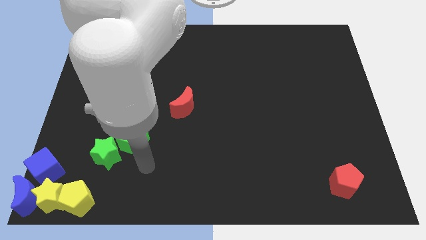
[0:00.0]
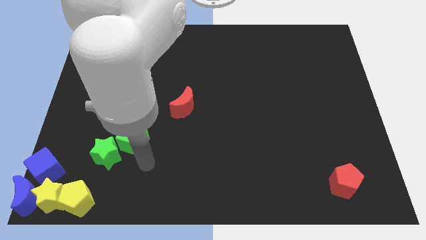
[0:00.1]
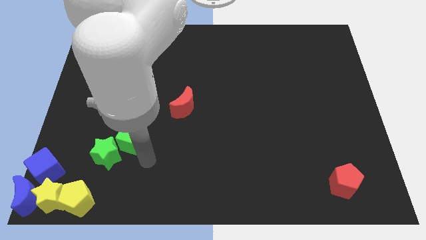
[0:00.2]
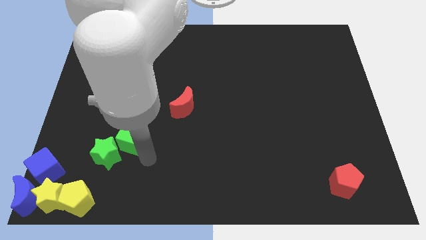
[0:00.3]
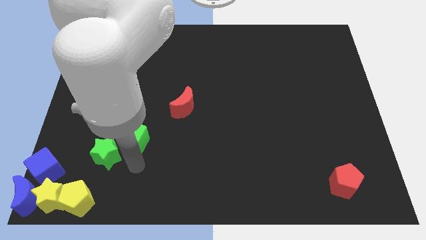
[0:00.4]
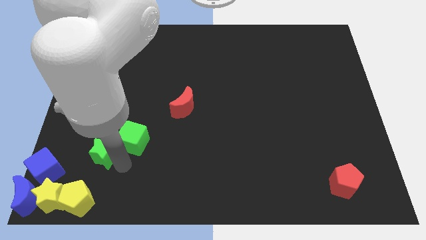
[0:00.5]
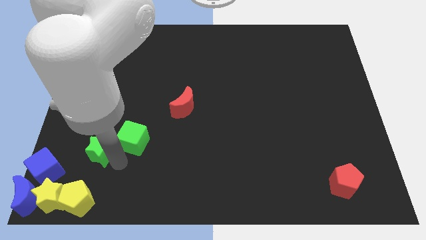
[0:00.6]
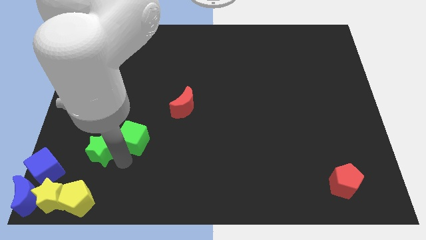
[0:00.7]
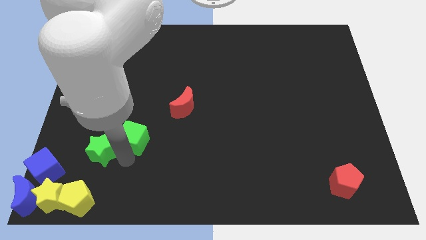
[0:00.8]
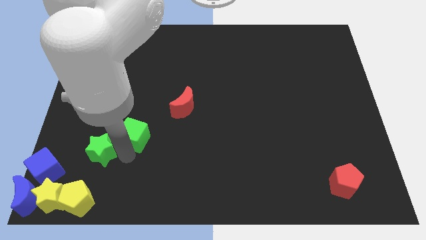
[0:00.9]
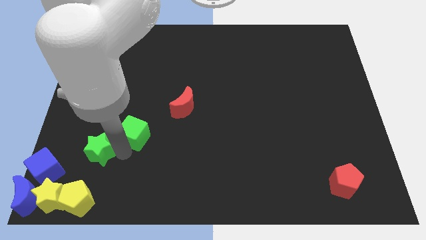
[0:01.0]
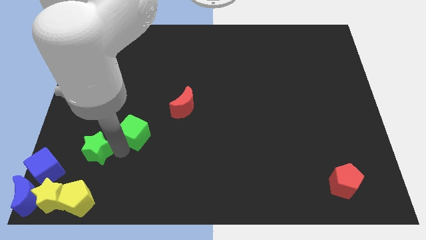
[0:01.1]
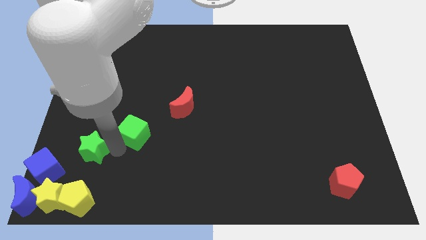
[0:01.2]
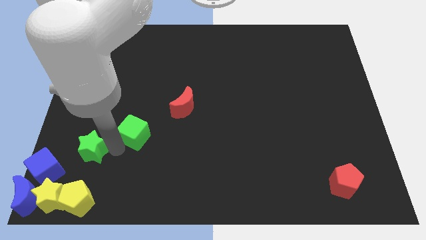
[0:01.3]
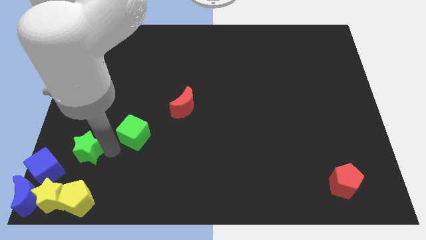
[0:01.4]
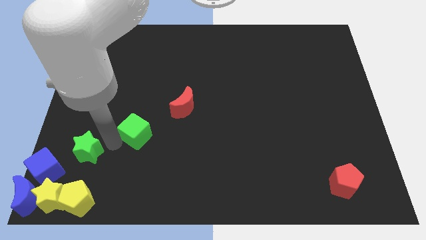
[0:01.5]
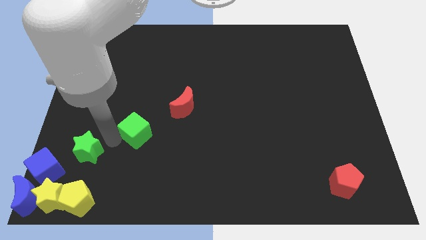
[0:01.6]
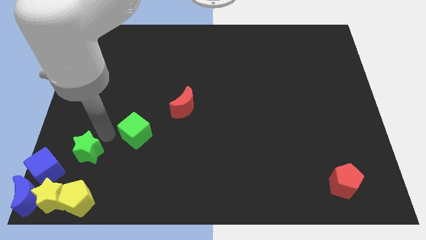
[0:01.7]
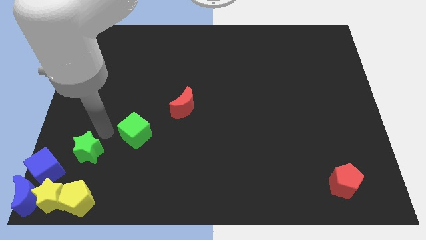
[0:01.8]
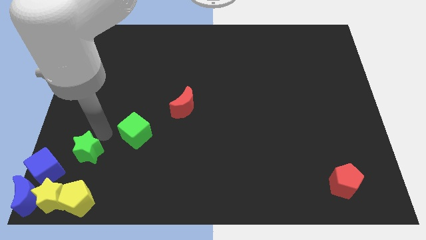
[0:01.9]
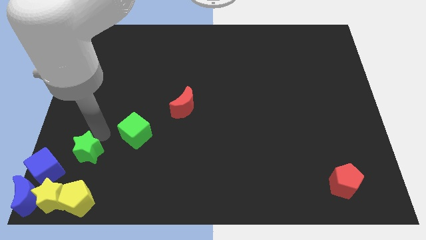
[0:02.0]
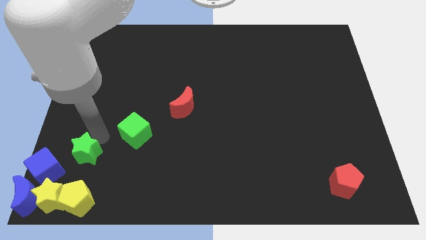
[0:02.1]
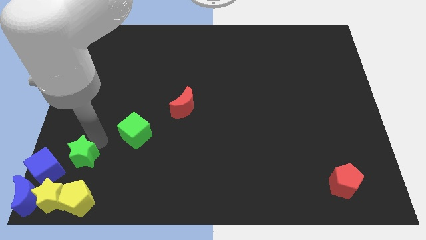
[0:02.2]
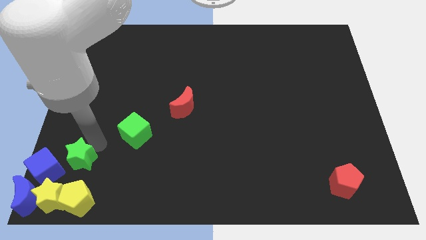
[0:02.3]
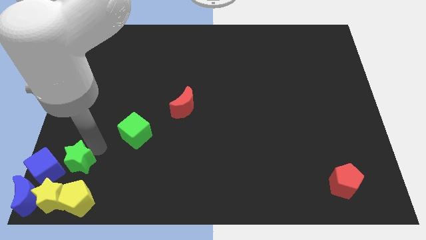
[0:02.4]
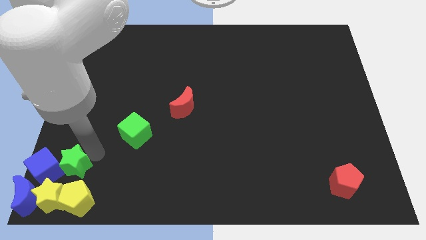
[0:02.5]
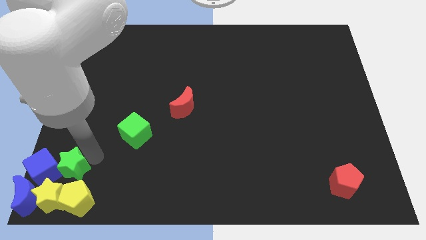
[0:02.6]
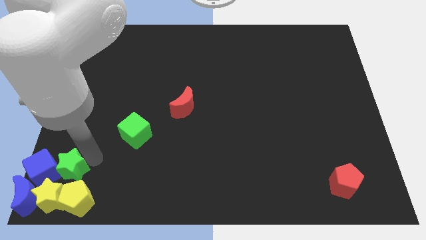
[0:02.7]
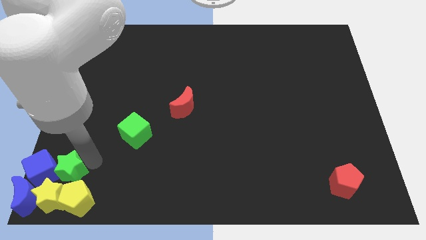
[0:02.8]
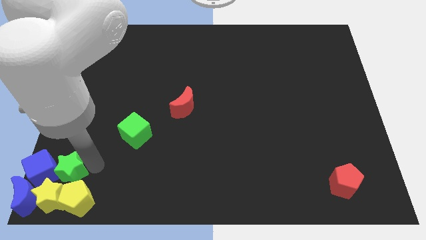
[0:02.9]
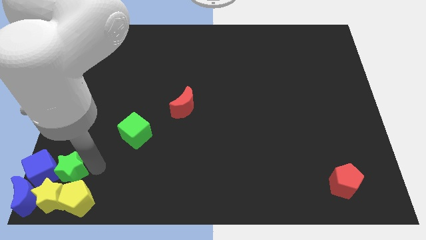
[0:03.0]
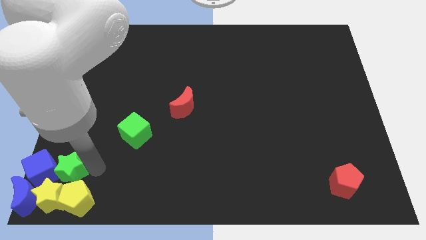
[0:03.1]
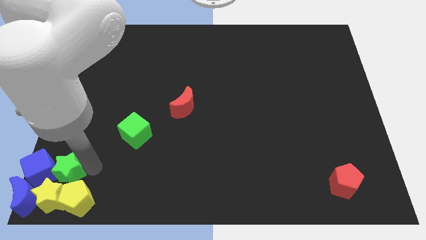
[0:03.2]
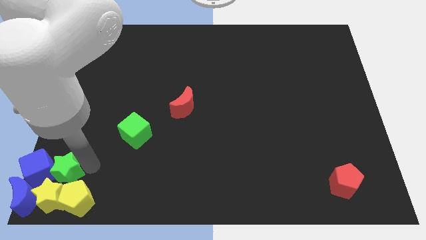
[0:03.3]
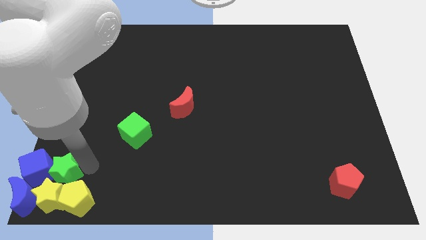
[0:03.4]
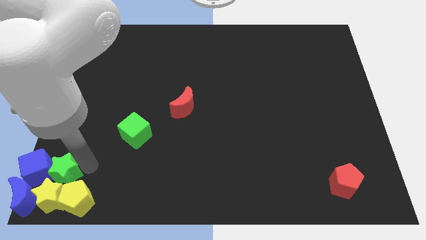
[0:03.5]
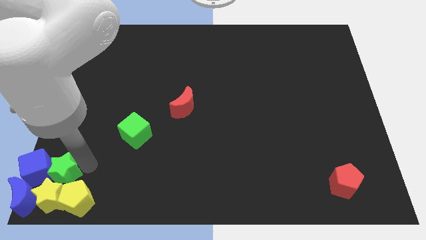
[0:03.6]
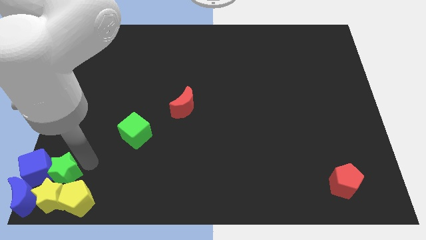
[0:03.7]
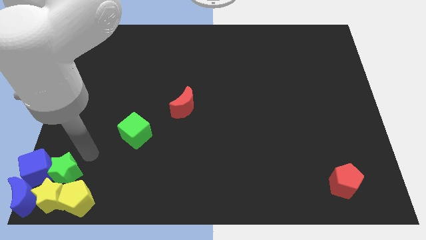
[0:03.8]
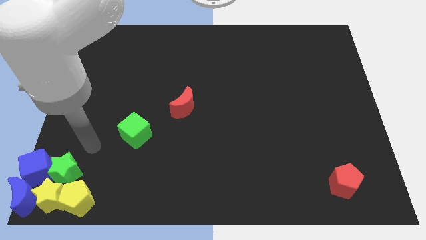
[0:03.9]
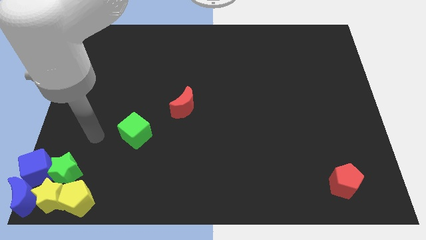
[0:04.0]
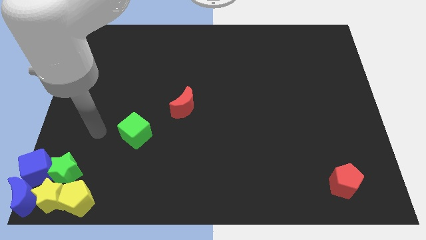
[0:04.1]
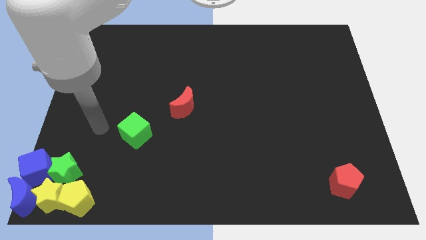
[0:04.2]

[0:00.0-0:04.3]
push the green star into the group of blocks

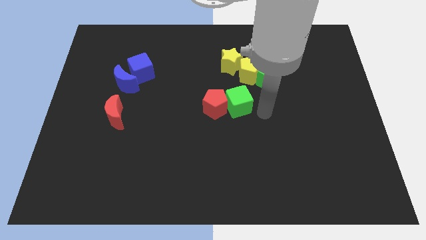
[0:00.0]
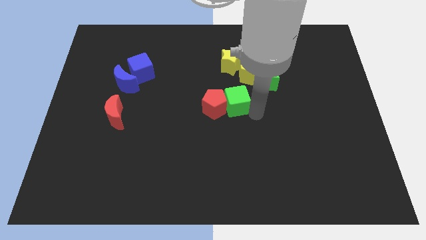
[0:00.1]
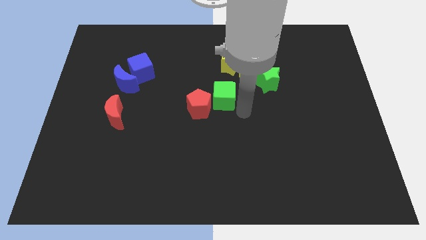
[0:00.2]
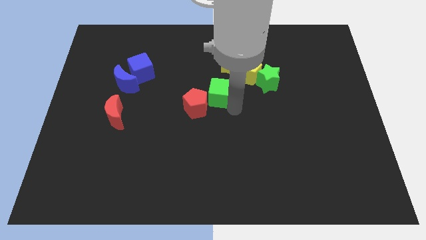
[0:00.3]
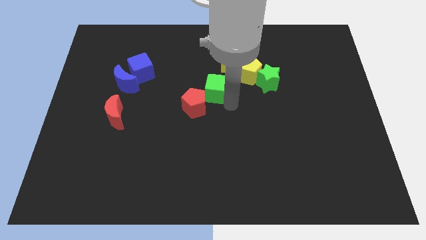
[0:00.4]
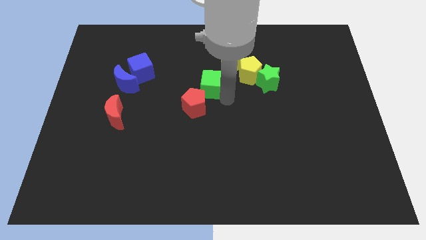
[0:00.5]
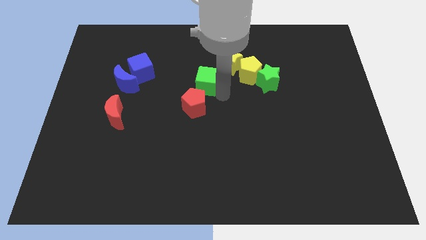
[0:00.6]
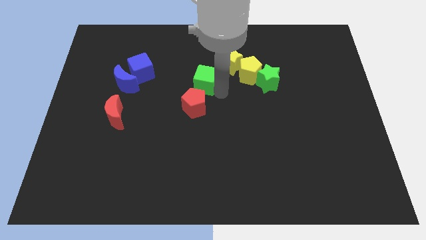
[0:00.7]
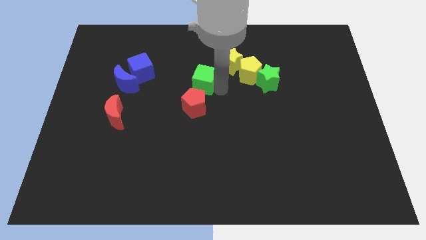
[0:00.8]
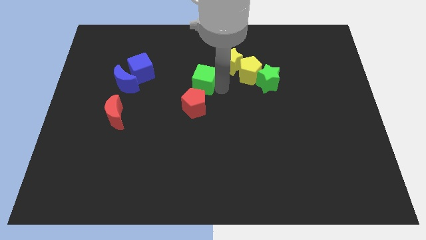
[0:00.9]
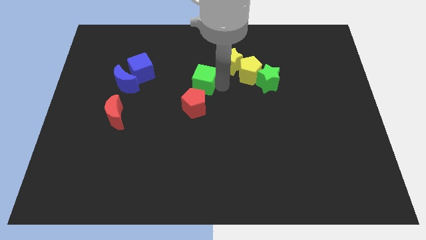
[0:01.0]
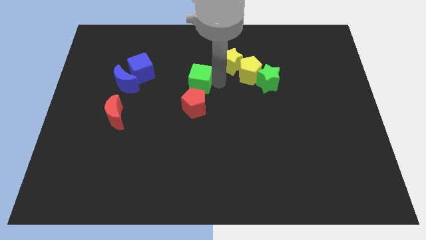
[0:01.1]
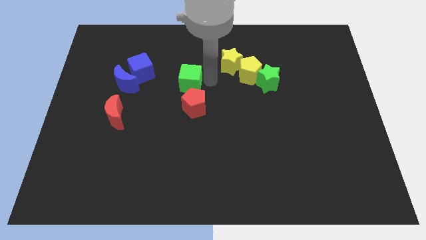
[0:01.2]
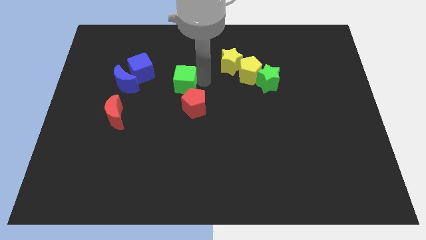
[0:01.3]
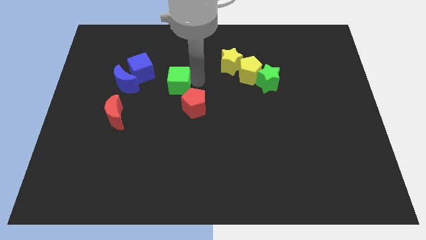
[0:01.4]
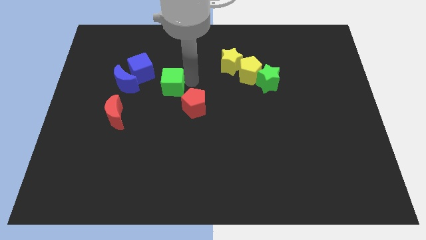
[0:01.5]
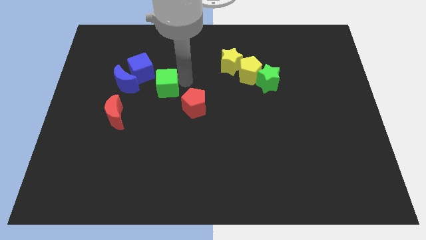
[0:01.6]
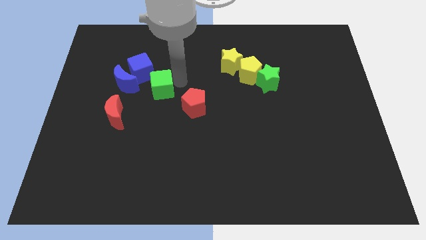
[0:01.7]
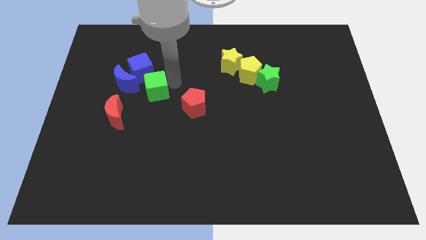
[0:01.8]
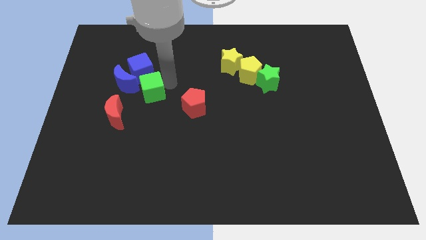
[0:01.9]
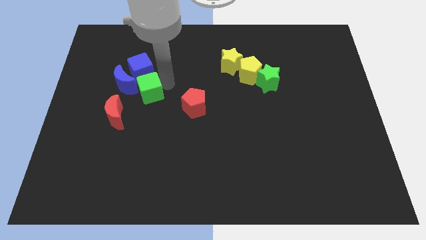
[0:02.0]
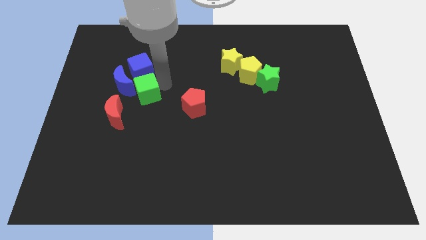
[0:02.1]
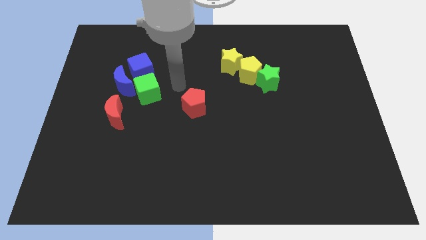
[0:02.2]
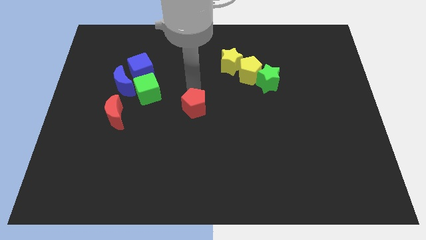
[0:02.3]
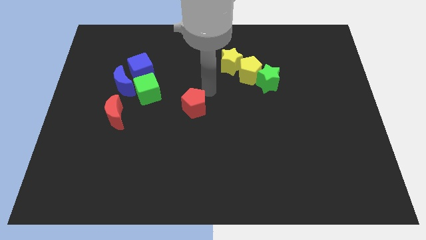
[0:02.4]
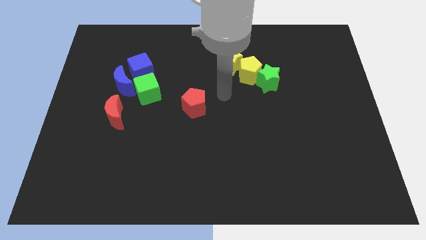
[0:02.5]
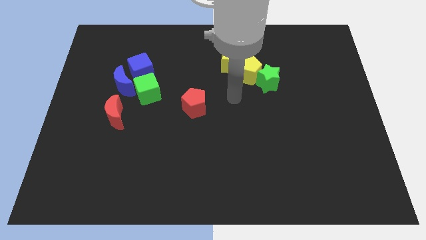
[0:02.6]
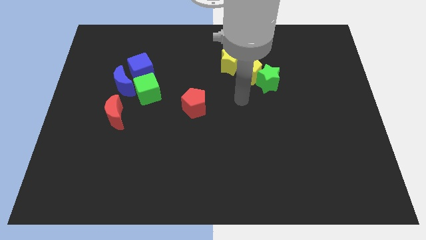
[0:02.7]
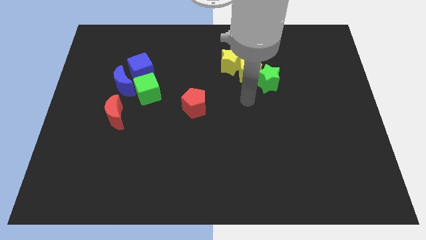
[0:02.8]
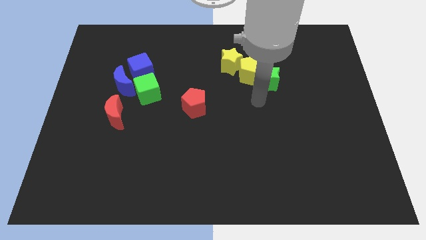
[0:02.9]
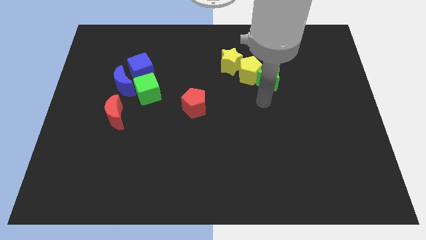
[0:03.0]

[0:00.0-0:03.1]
put the green cube at the right side of the blue crescent

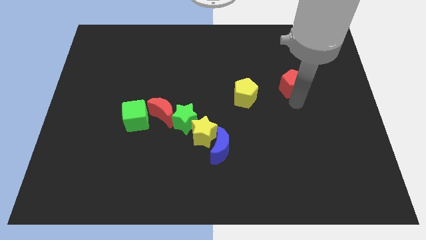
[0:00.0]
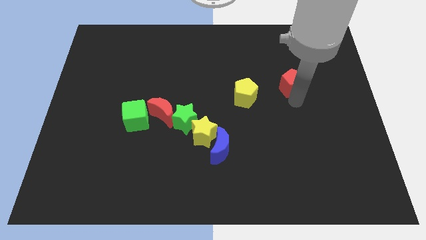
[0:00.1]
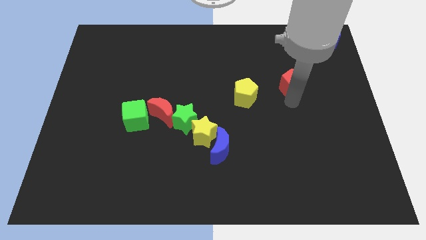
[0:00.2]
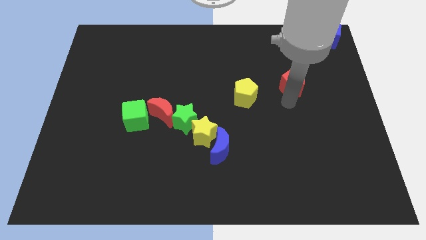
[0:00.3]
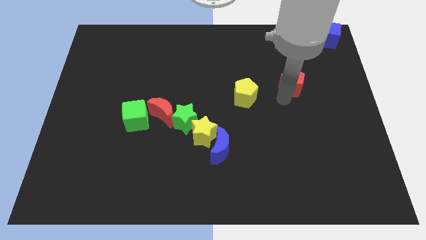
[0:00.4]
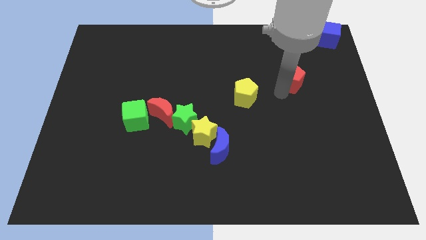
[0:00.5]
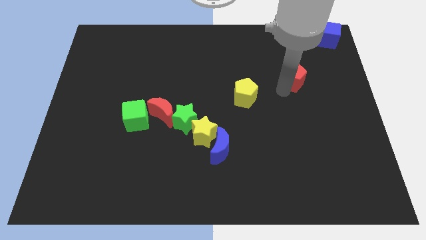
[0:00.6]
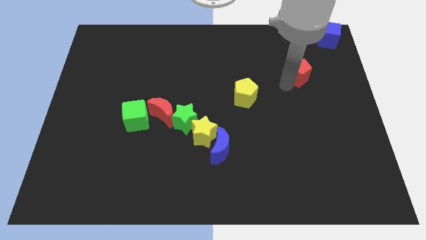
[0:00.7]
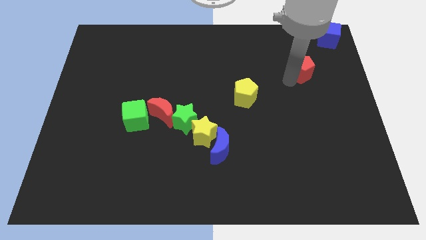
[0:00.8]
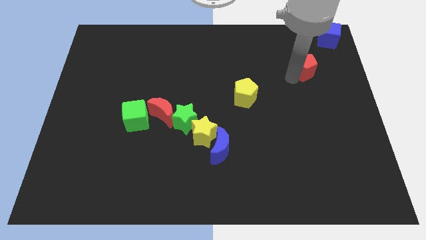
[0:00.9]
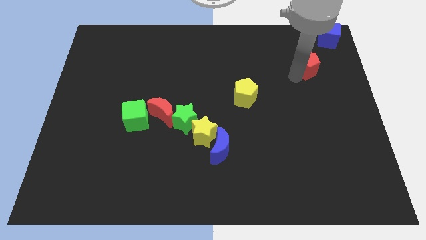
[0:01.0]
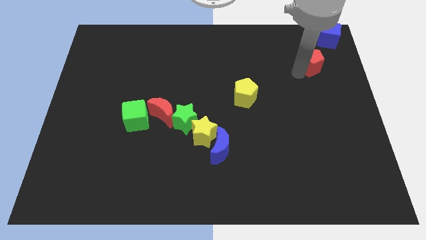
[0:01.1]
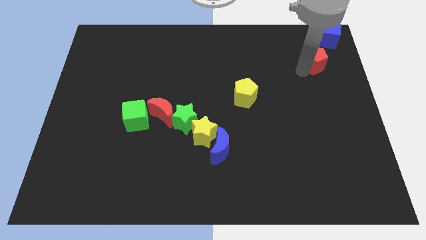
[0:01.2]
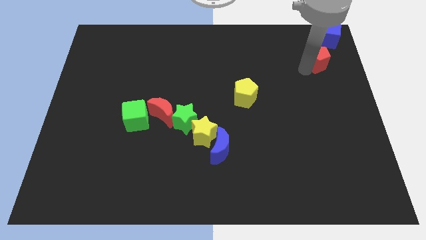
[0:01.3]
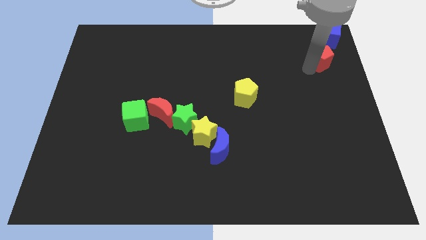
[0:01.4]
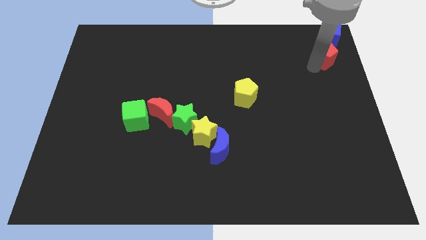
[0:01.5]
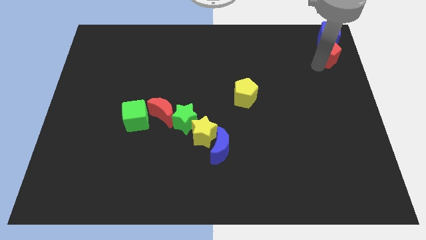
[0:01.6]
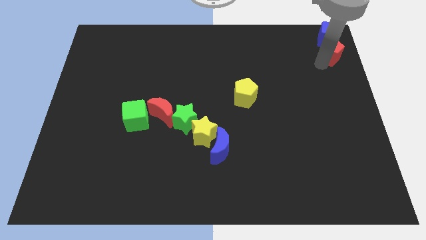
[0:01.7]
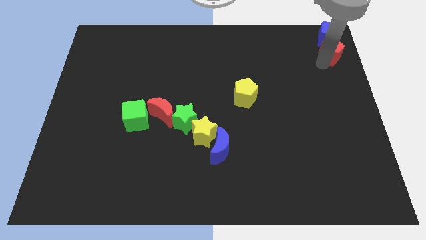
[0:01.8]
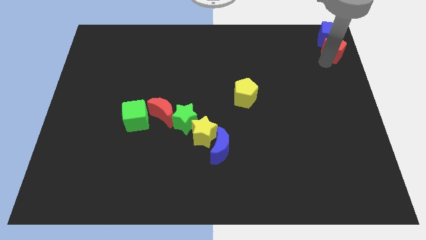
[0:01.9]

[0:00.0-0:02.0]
place the red pentagon below the blue cube
